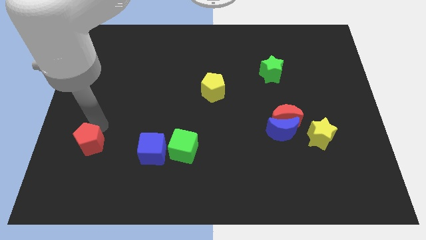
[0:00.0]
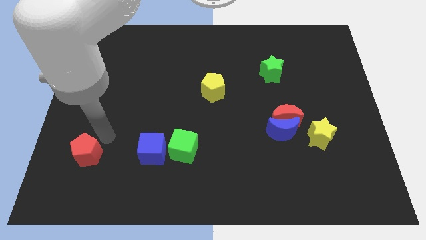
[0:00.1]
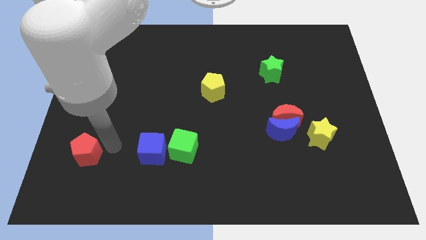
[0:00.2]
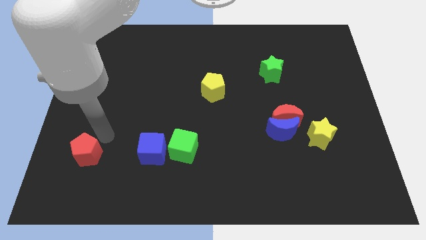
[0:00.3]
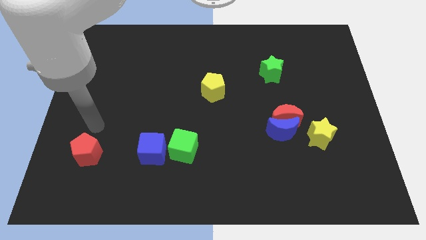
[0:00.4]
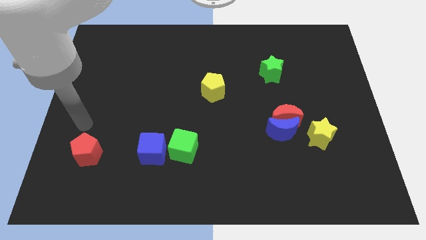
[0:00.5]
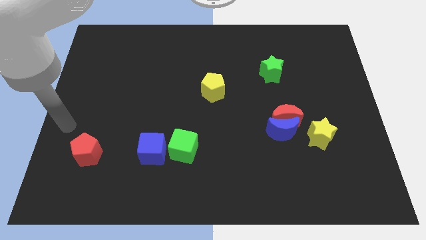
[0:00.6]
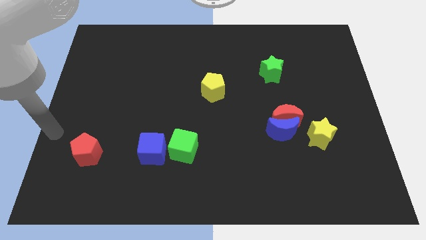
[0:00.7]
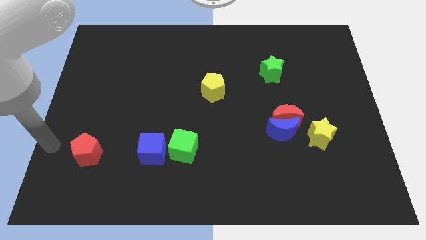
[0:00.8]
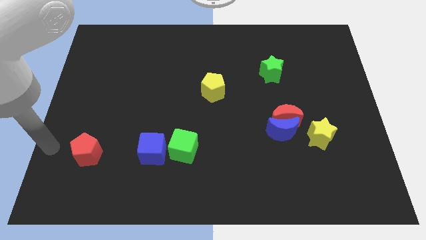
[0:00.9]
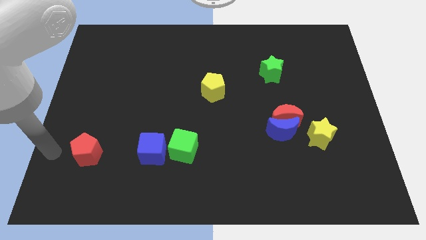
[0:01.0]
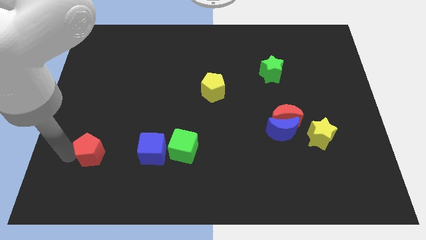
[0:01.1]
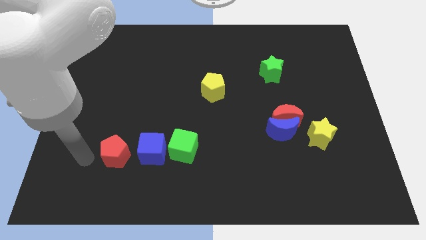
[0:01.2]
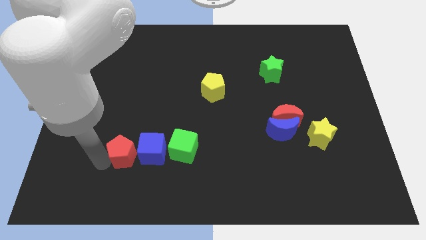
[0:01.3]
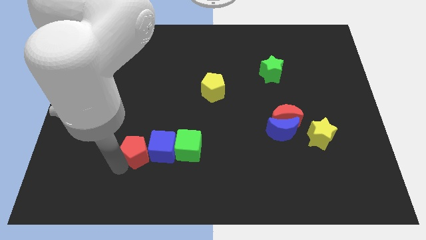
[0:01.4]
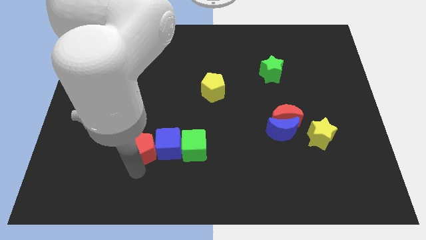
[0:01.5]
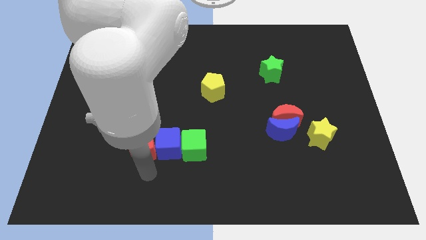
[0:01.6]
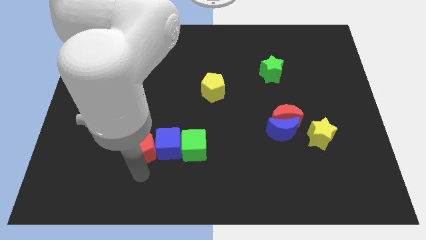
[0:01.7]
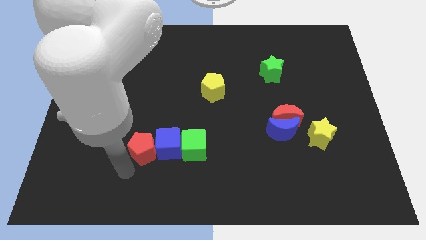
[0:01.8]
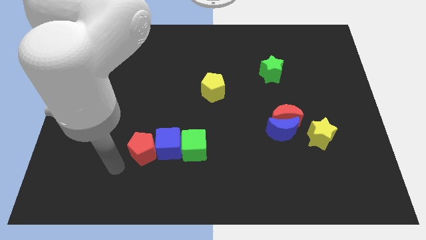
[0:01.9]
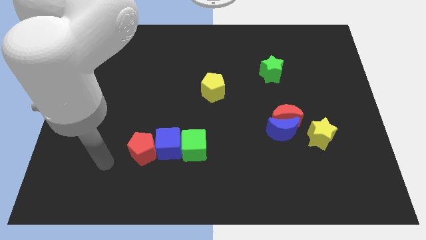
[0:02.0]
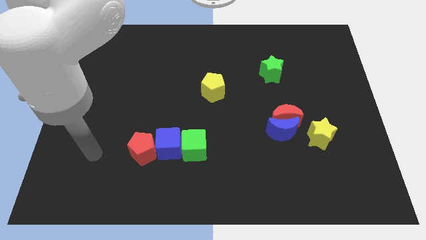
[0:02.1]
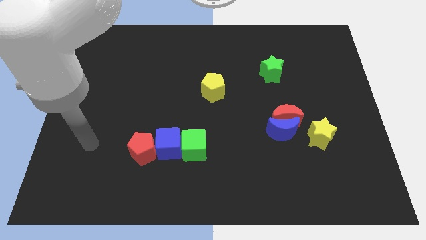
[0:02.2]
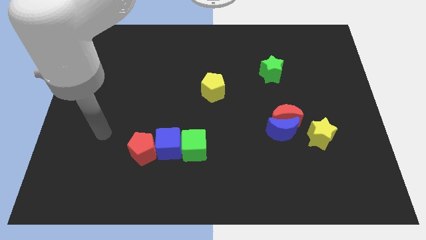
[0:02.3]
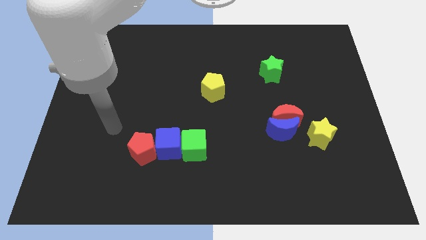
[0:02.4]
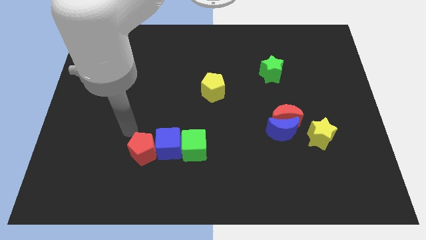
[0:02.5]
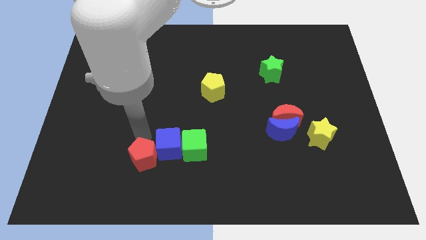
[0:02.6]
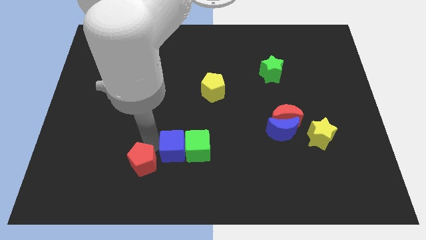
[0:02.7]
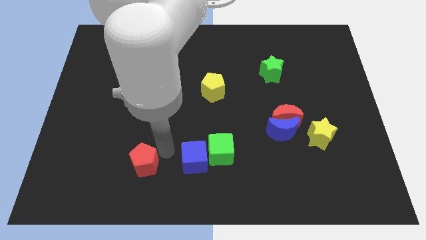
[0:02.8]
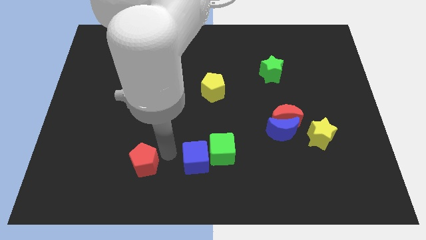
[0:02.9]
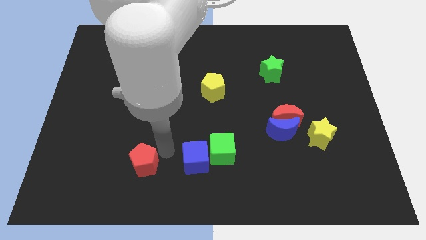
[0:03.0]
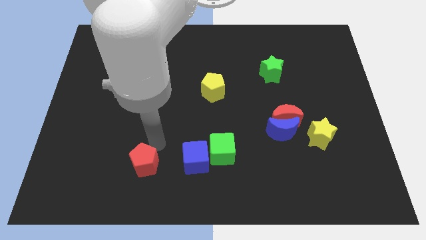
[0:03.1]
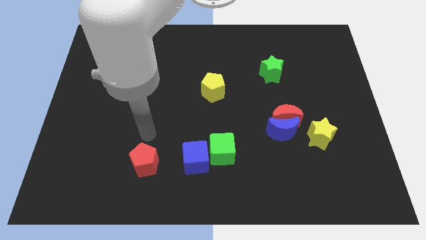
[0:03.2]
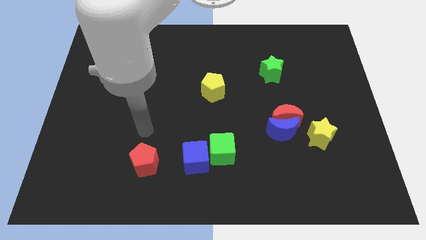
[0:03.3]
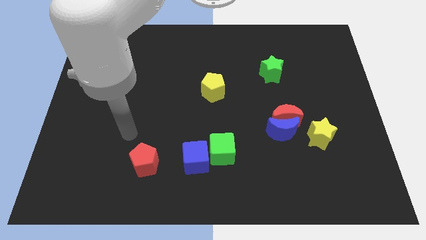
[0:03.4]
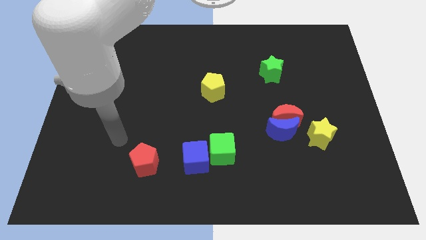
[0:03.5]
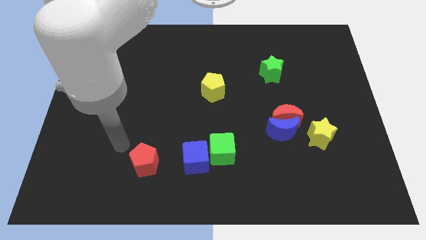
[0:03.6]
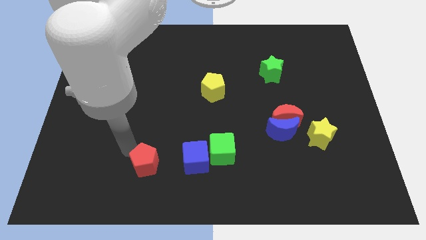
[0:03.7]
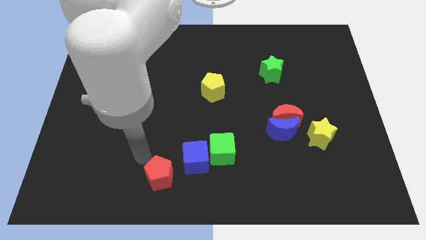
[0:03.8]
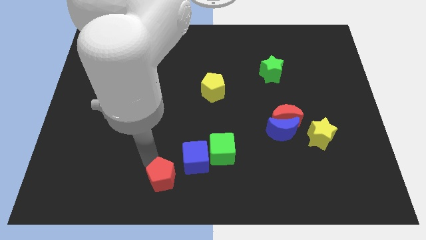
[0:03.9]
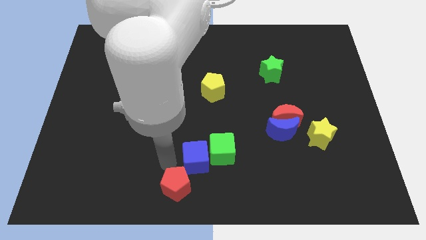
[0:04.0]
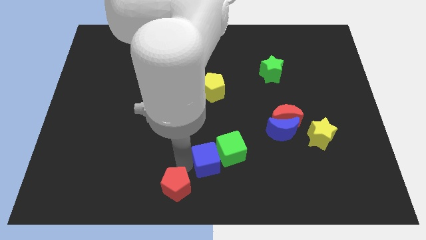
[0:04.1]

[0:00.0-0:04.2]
drag the red pentagon slightly downwards

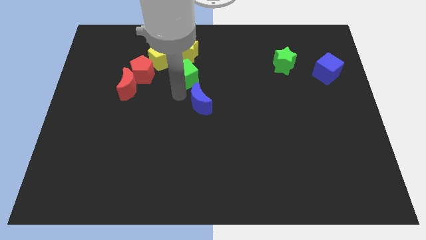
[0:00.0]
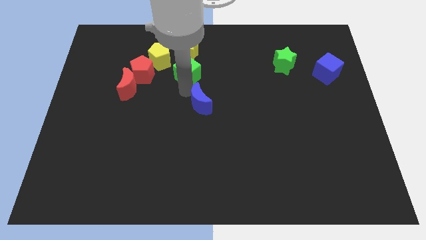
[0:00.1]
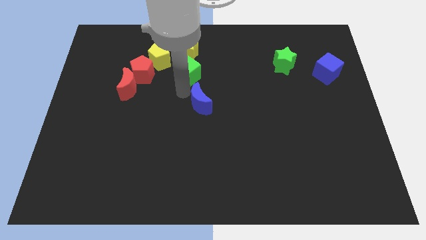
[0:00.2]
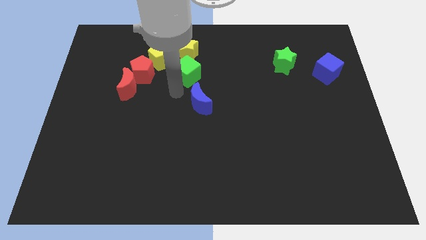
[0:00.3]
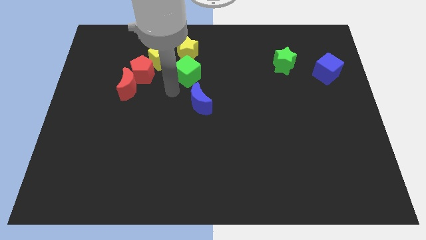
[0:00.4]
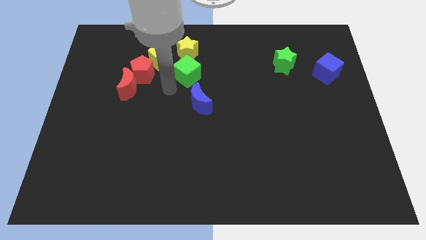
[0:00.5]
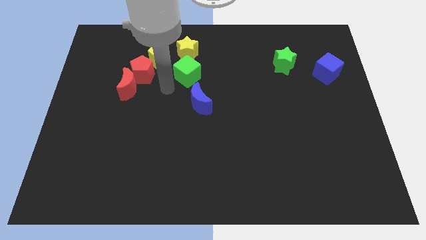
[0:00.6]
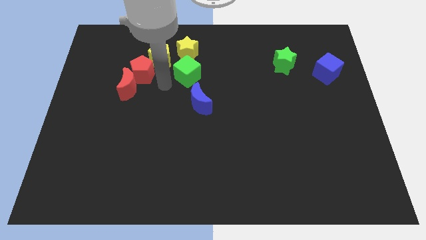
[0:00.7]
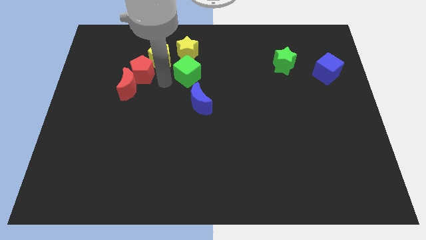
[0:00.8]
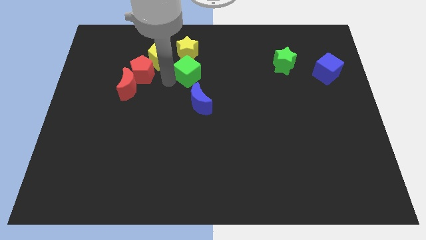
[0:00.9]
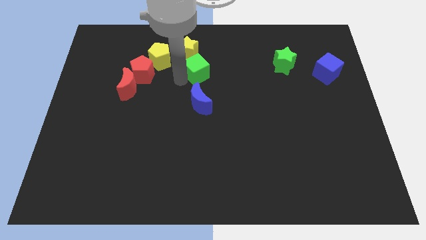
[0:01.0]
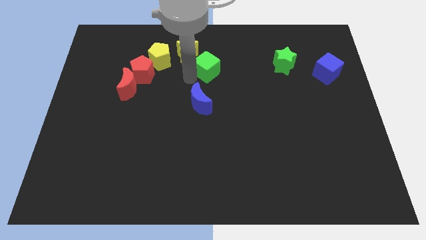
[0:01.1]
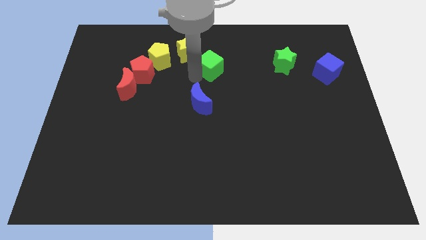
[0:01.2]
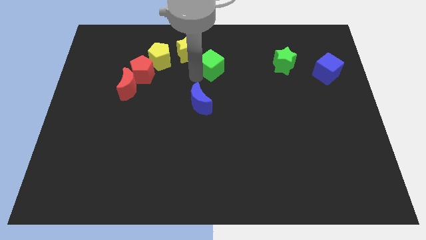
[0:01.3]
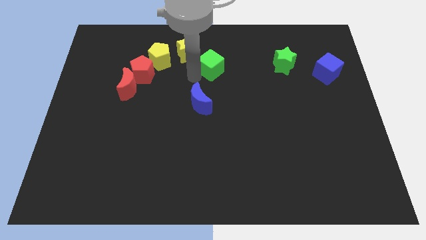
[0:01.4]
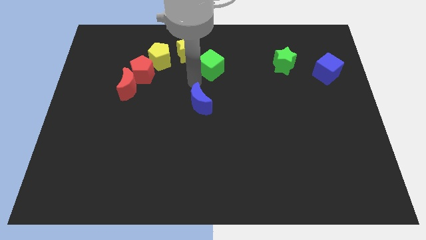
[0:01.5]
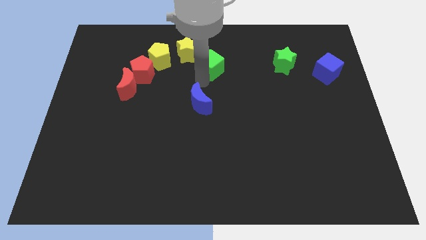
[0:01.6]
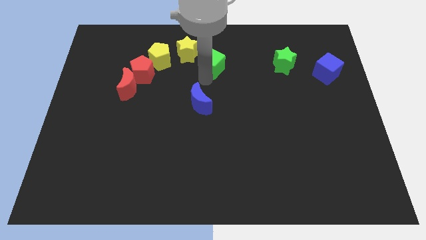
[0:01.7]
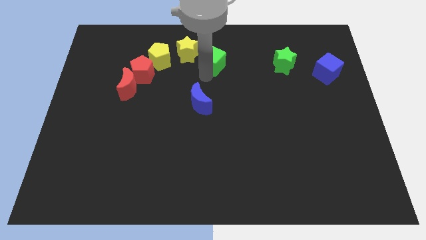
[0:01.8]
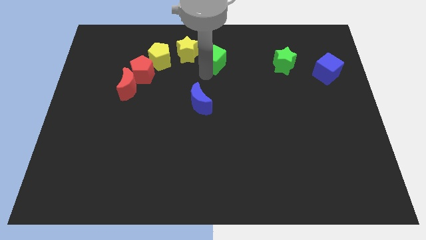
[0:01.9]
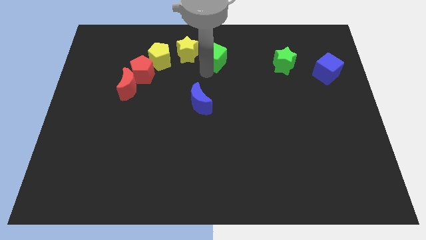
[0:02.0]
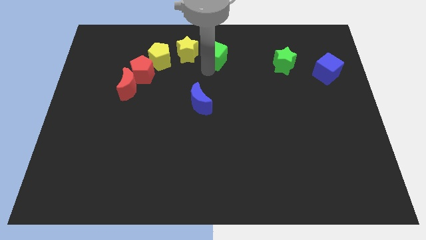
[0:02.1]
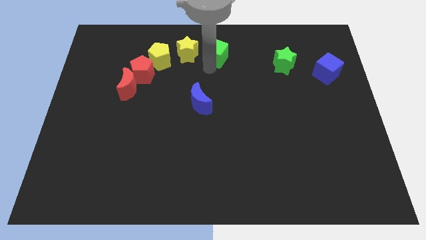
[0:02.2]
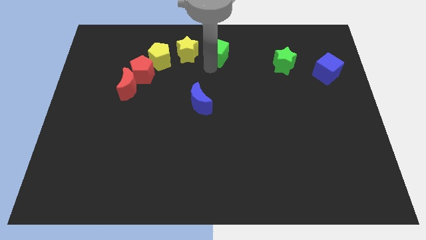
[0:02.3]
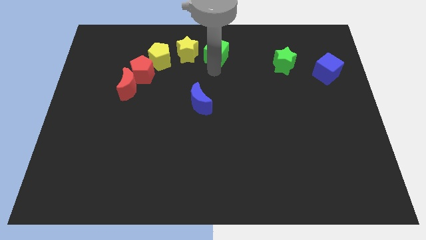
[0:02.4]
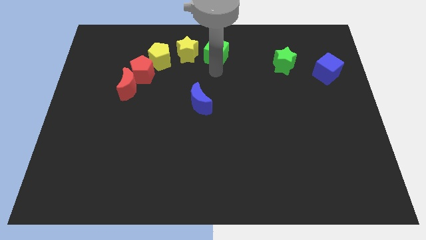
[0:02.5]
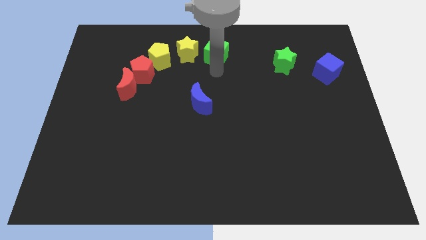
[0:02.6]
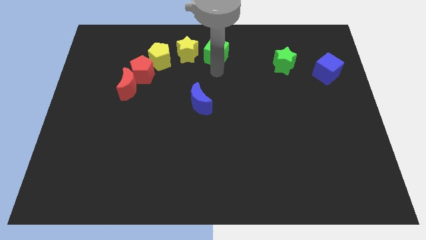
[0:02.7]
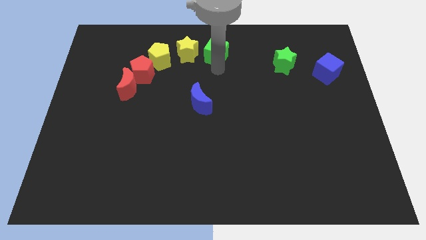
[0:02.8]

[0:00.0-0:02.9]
slide the green cube to the right of the yellow star

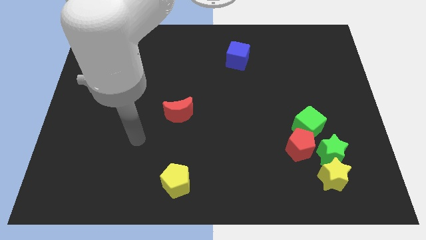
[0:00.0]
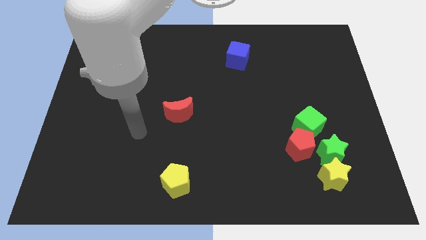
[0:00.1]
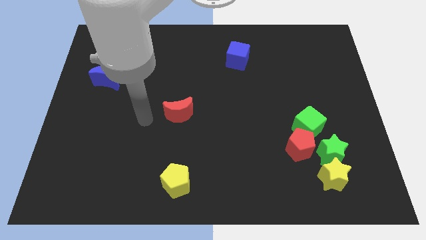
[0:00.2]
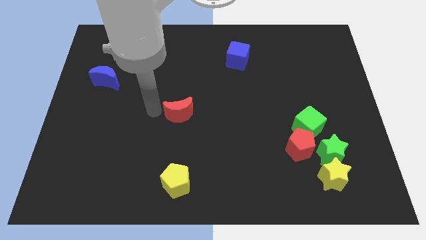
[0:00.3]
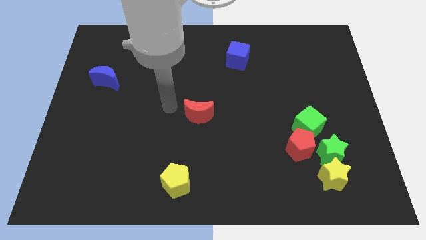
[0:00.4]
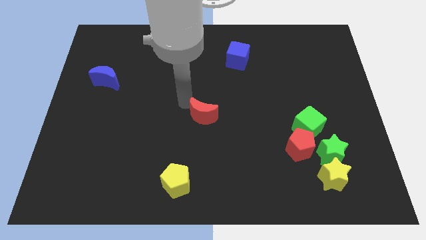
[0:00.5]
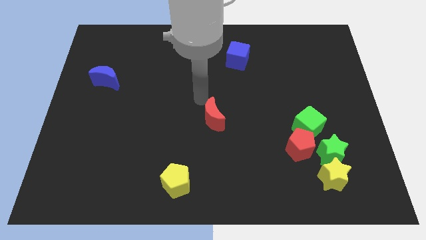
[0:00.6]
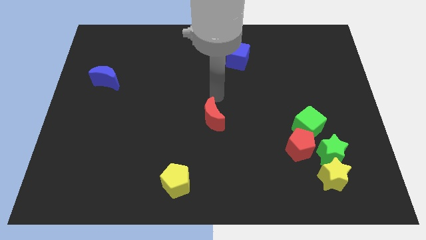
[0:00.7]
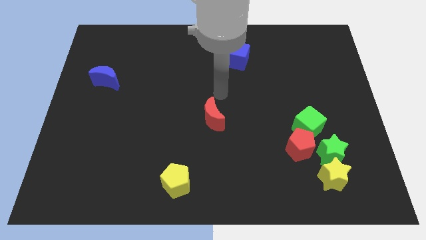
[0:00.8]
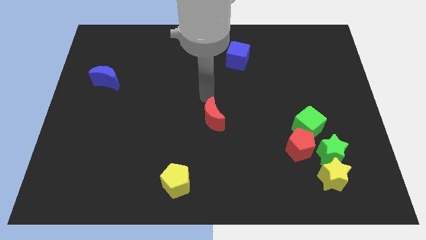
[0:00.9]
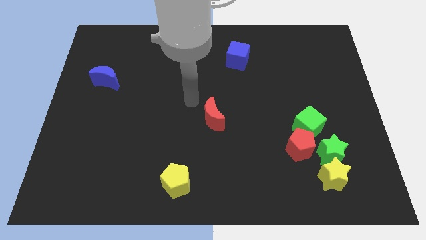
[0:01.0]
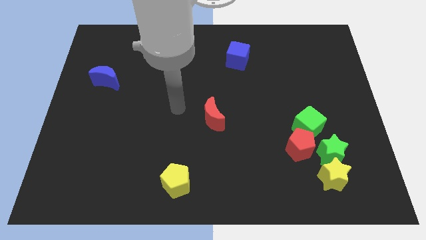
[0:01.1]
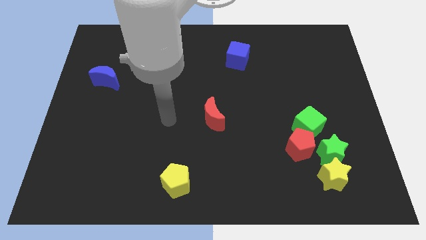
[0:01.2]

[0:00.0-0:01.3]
push red crescent to its right

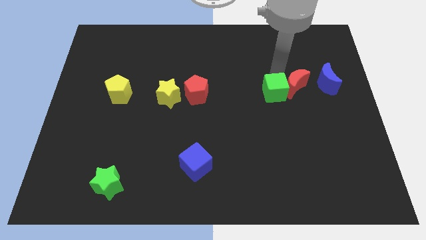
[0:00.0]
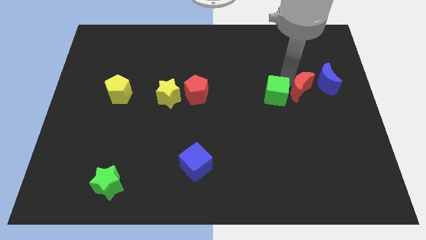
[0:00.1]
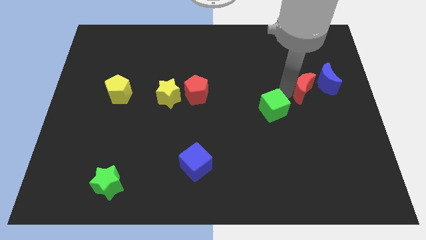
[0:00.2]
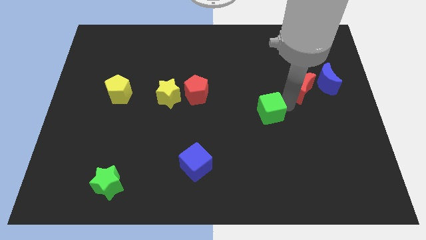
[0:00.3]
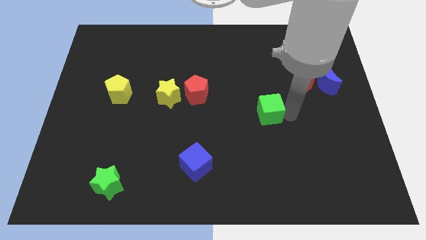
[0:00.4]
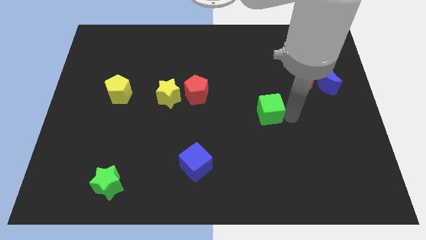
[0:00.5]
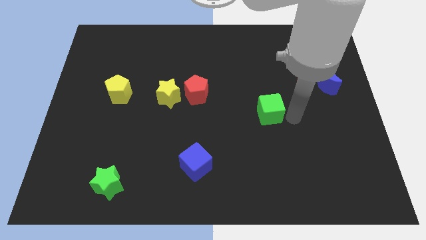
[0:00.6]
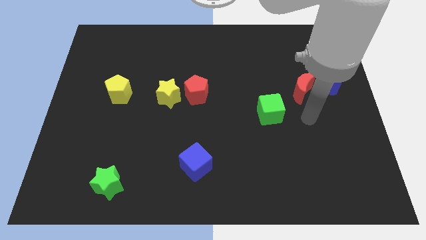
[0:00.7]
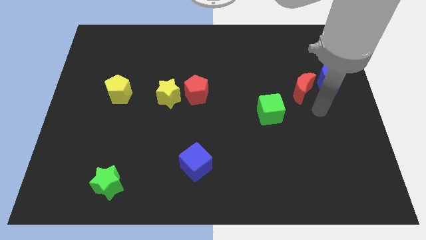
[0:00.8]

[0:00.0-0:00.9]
push the green cube slightly to the bottom
